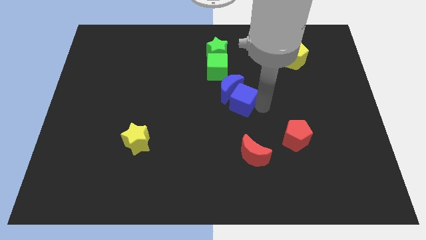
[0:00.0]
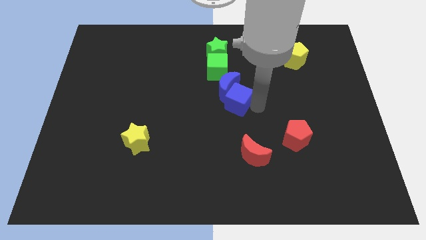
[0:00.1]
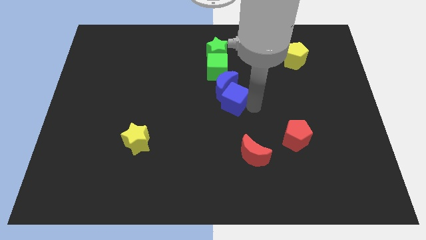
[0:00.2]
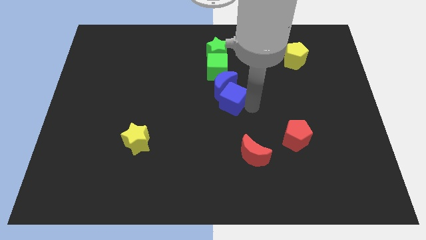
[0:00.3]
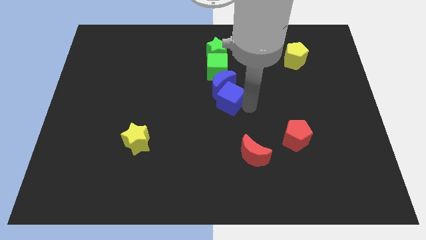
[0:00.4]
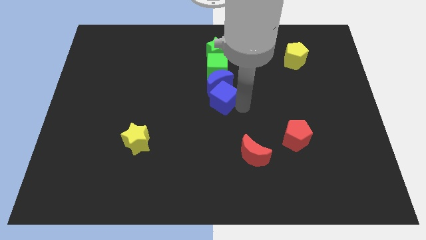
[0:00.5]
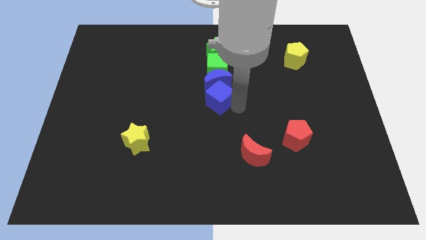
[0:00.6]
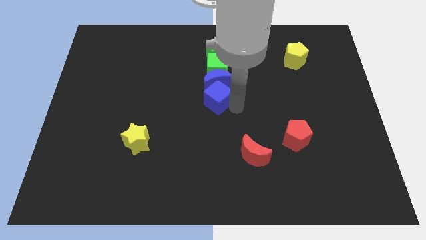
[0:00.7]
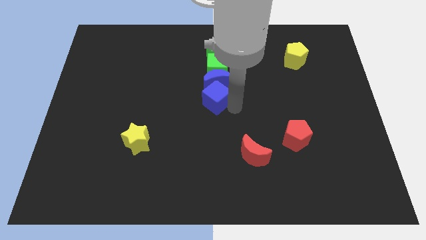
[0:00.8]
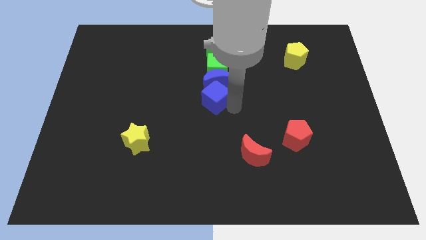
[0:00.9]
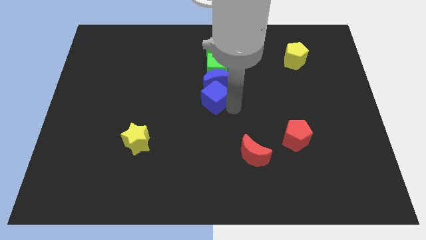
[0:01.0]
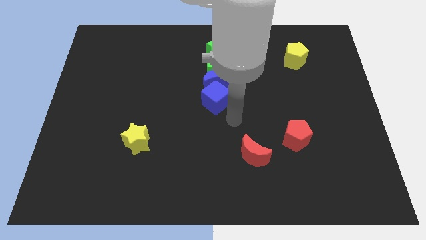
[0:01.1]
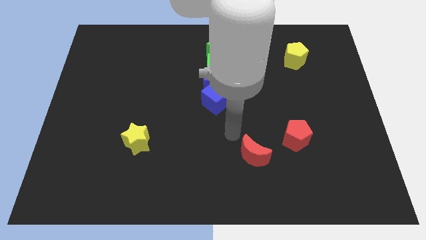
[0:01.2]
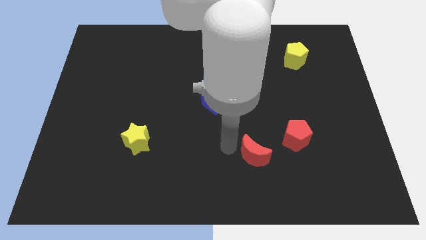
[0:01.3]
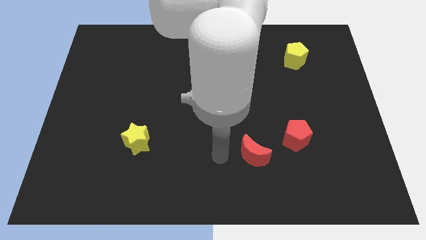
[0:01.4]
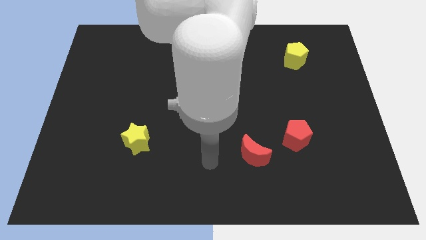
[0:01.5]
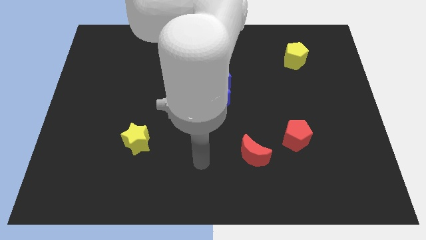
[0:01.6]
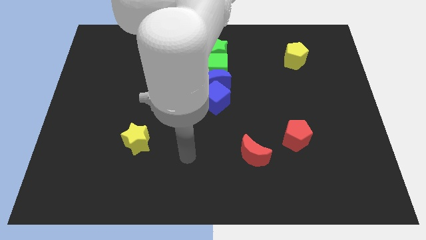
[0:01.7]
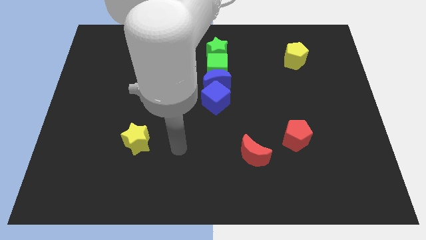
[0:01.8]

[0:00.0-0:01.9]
place the blue cube along with blue crescent in center of the board

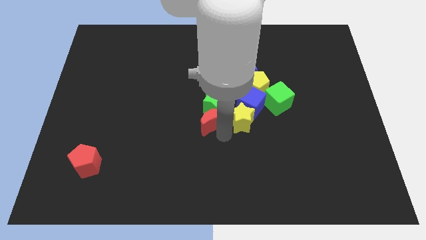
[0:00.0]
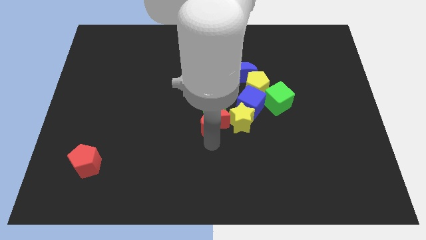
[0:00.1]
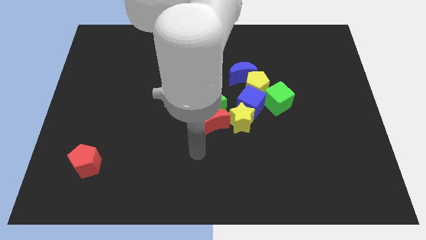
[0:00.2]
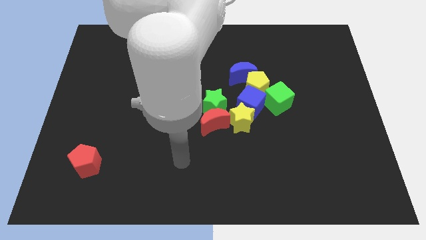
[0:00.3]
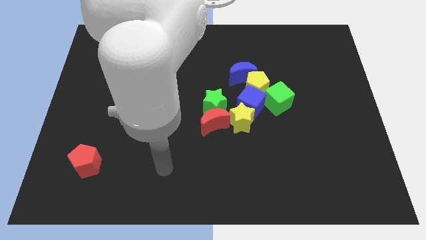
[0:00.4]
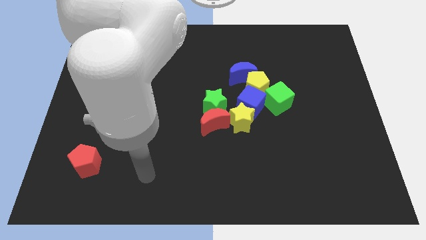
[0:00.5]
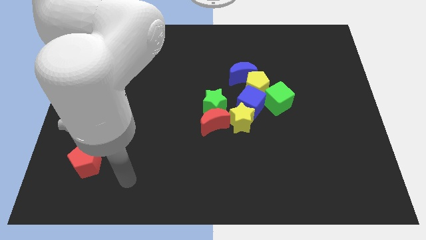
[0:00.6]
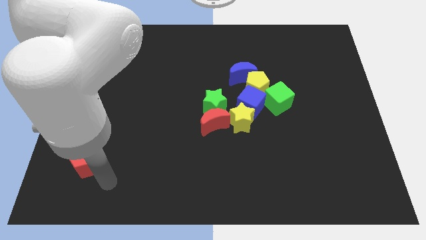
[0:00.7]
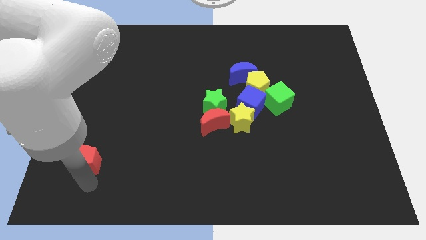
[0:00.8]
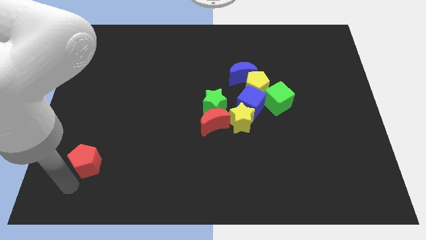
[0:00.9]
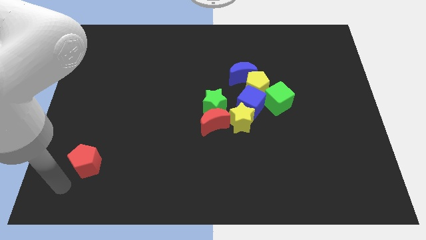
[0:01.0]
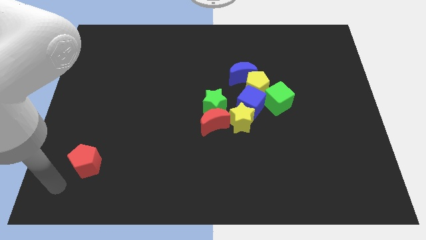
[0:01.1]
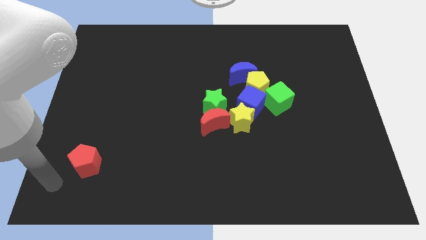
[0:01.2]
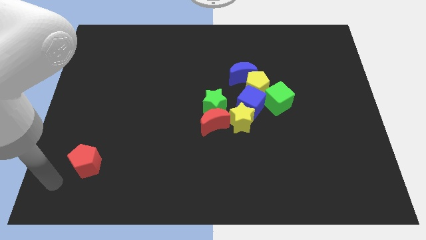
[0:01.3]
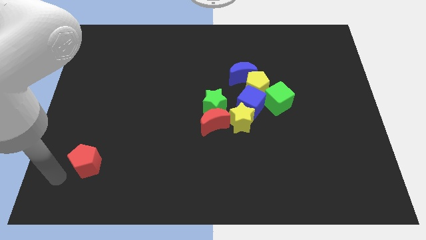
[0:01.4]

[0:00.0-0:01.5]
point your hand at the bottom left side of the red pentagon

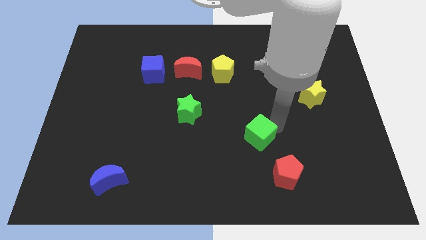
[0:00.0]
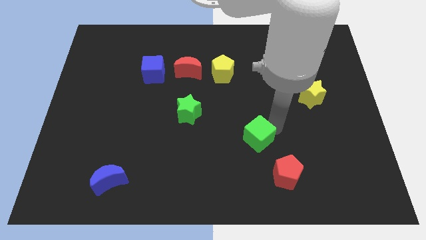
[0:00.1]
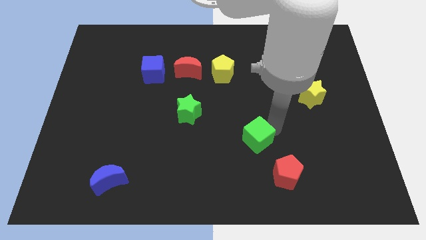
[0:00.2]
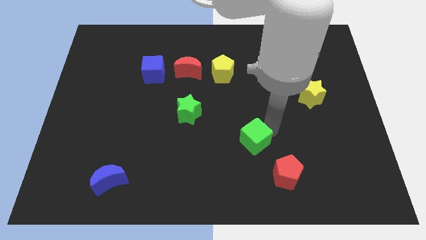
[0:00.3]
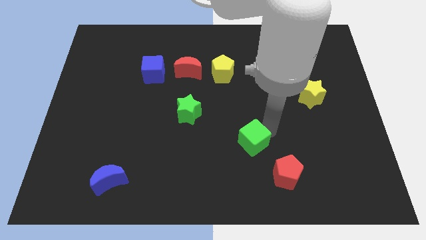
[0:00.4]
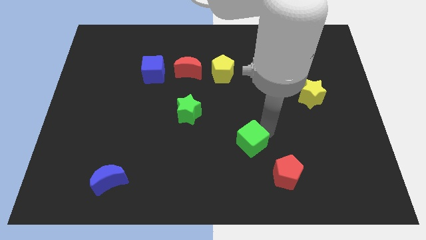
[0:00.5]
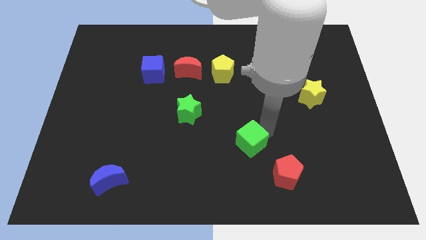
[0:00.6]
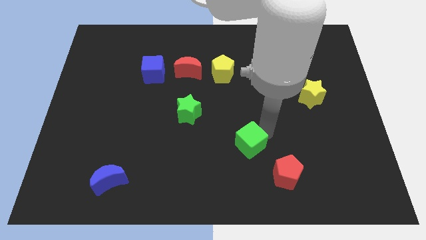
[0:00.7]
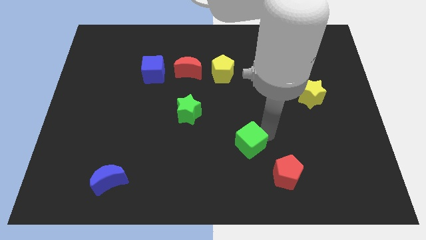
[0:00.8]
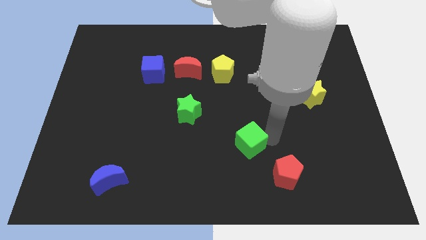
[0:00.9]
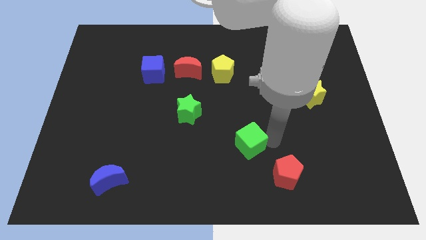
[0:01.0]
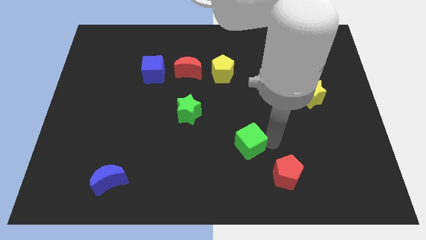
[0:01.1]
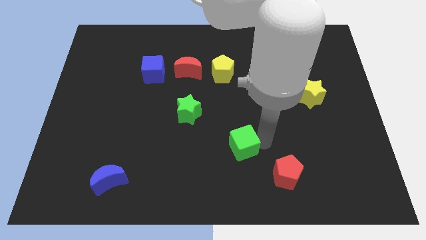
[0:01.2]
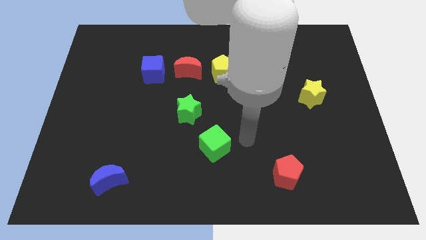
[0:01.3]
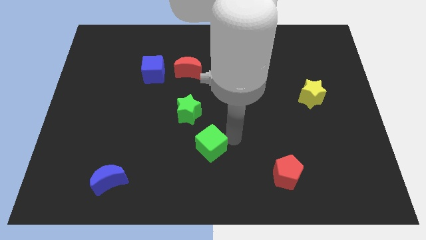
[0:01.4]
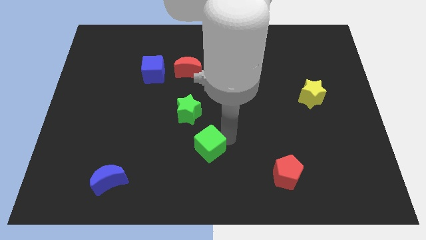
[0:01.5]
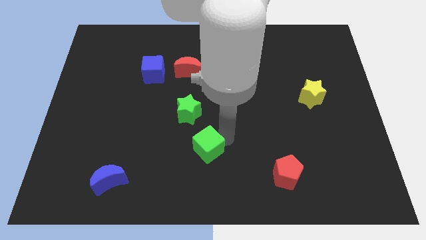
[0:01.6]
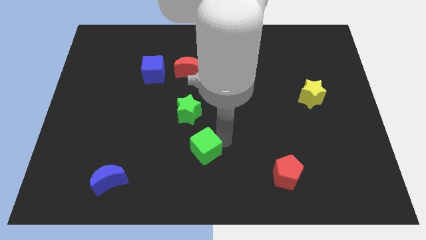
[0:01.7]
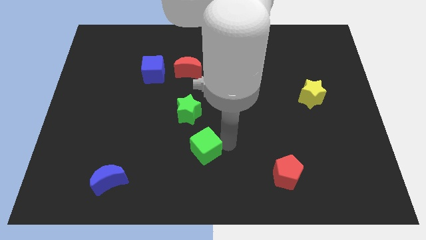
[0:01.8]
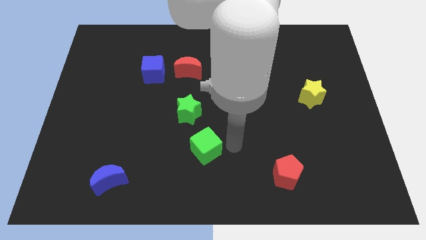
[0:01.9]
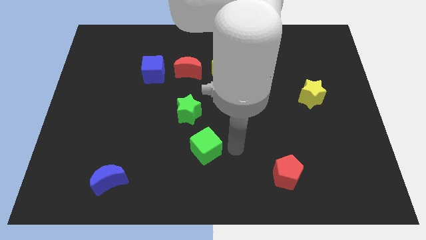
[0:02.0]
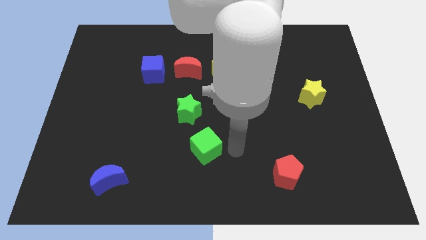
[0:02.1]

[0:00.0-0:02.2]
slide green cube to the bottom right of green star

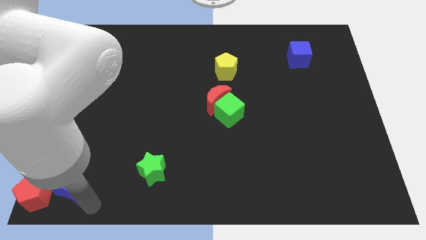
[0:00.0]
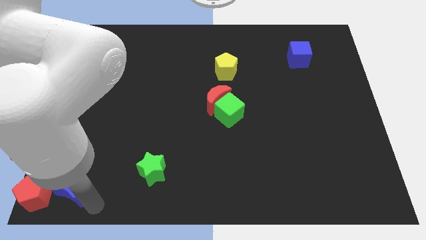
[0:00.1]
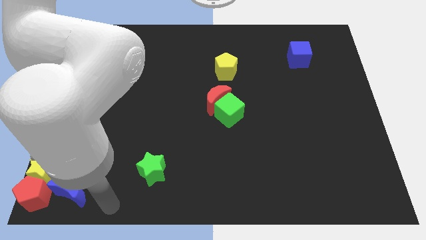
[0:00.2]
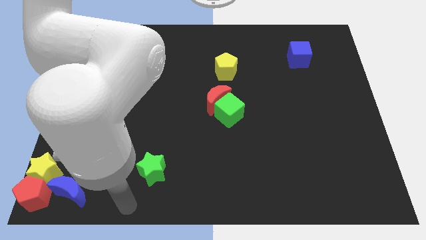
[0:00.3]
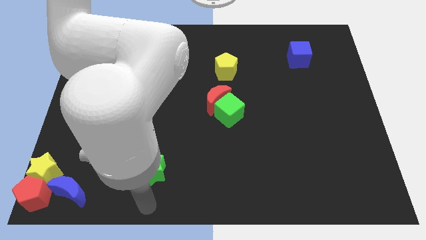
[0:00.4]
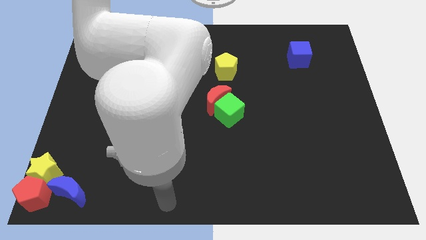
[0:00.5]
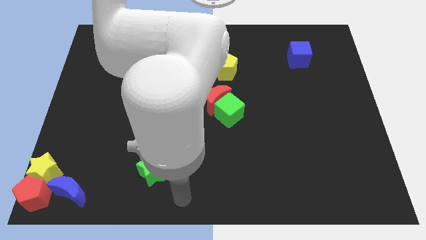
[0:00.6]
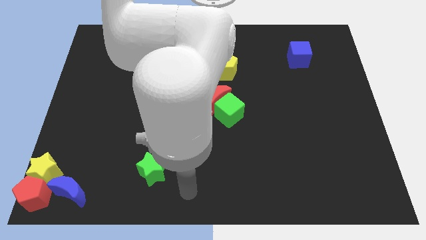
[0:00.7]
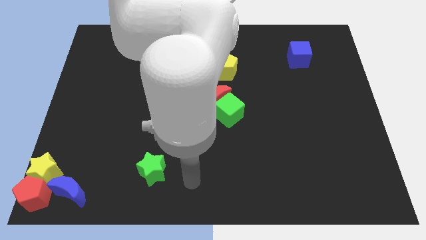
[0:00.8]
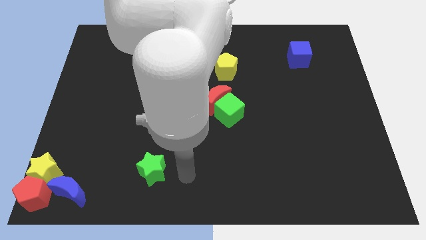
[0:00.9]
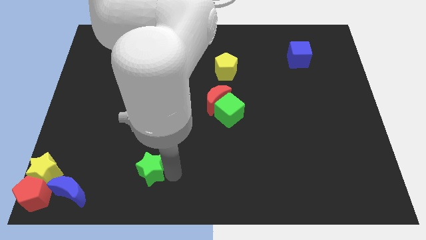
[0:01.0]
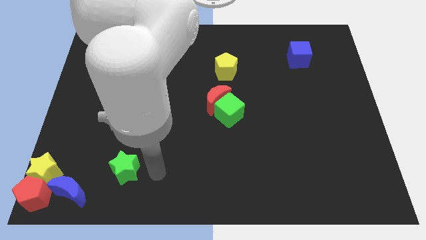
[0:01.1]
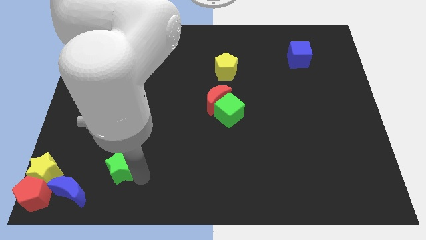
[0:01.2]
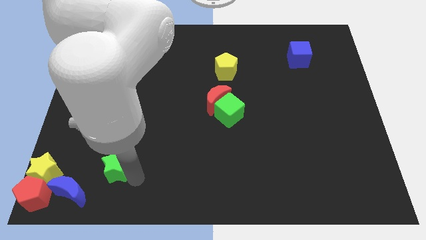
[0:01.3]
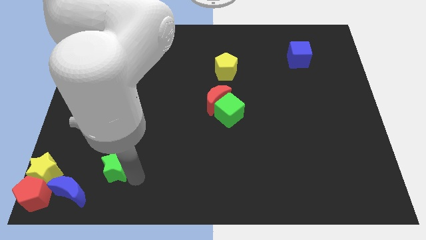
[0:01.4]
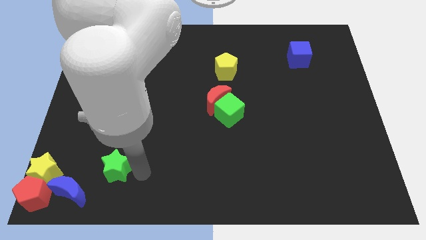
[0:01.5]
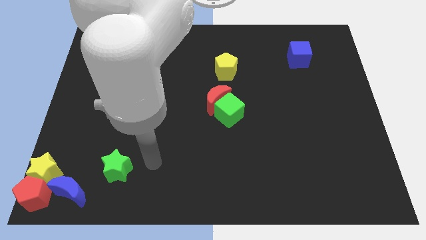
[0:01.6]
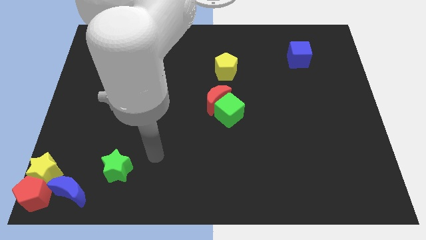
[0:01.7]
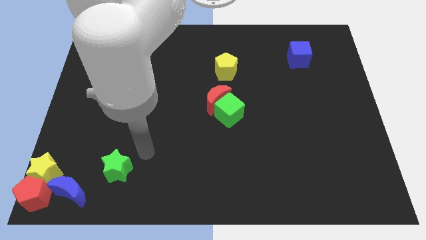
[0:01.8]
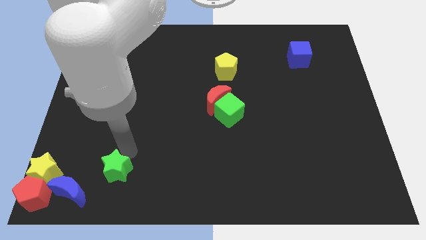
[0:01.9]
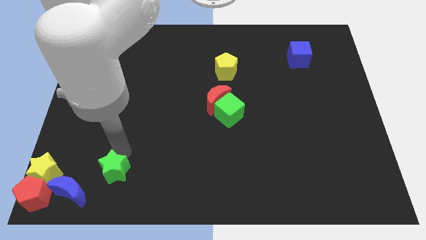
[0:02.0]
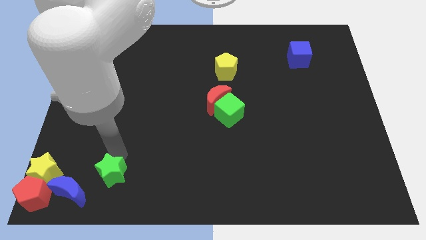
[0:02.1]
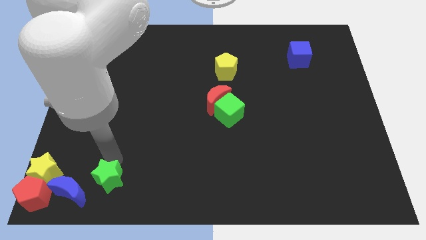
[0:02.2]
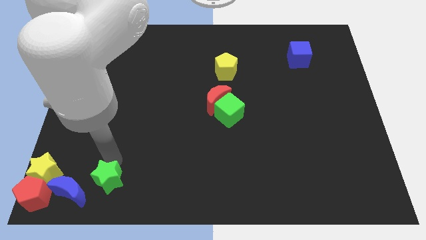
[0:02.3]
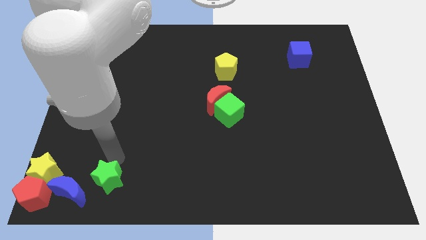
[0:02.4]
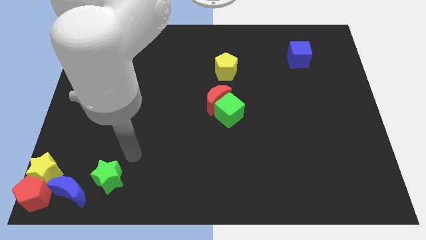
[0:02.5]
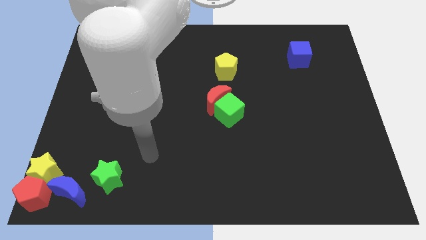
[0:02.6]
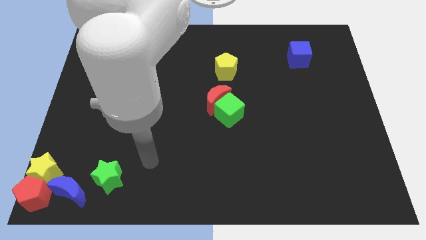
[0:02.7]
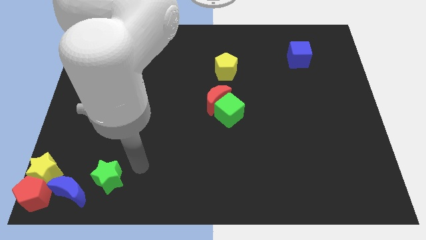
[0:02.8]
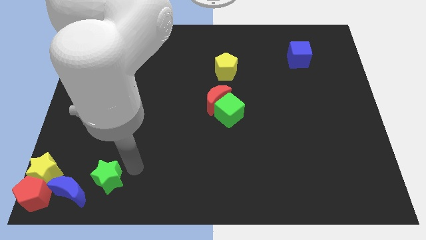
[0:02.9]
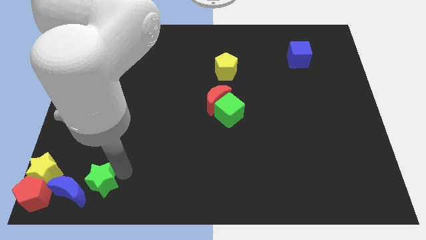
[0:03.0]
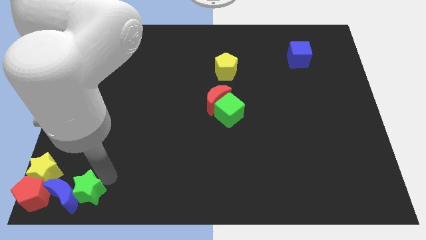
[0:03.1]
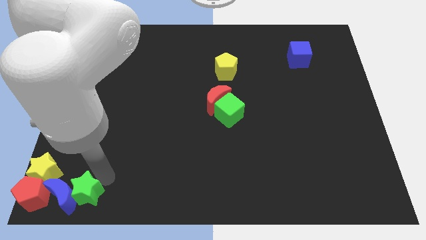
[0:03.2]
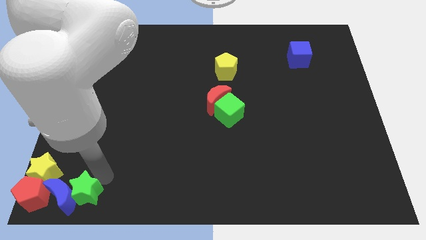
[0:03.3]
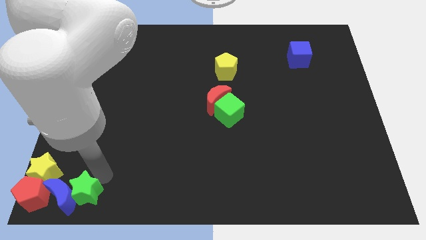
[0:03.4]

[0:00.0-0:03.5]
push the green star towards the bottom left corner of the board
